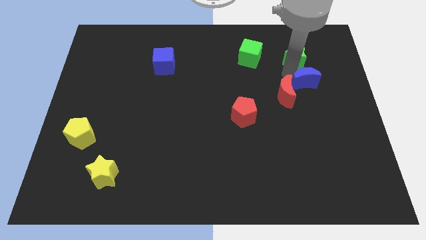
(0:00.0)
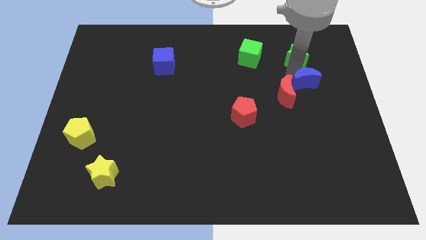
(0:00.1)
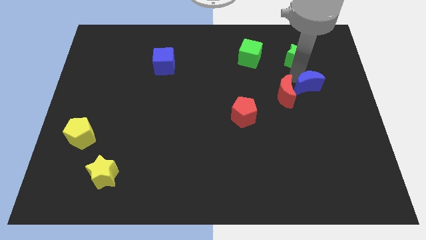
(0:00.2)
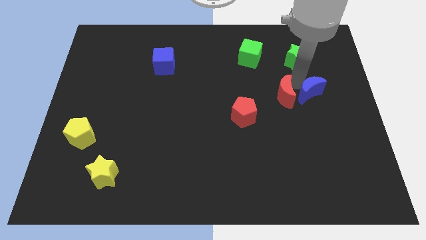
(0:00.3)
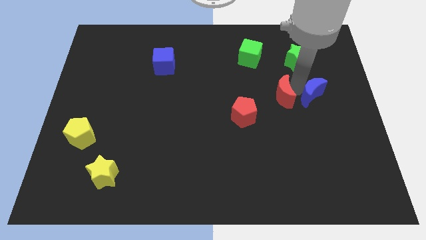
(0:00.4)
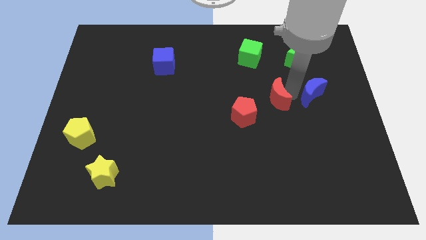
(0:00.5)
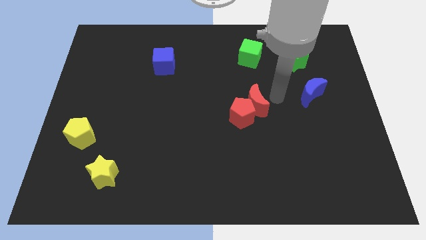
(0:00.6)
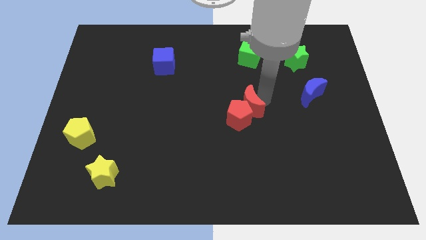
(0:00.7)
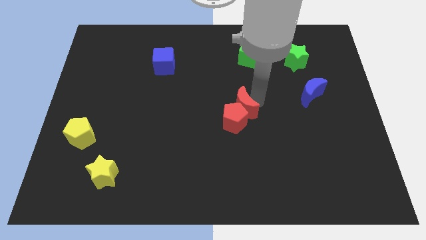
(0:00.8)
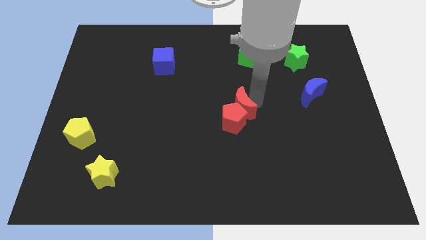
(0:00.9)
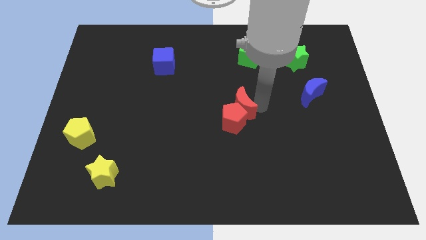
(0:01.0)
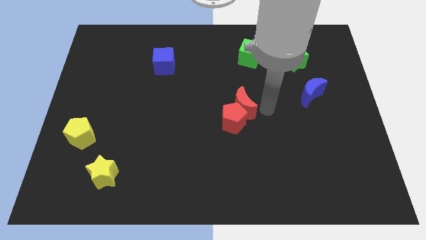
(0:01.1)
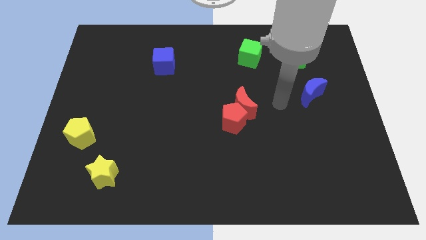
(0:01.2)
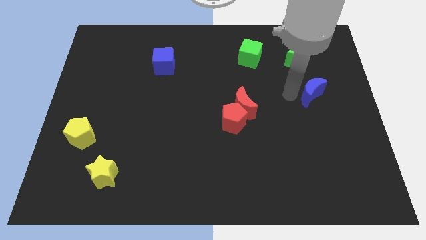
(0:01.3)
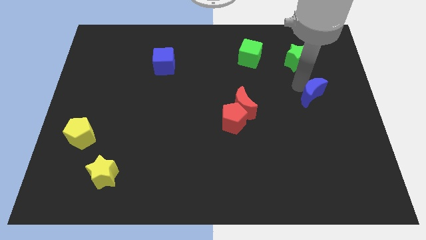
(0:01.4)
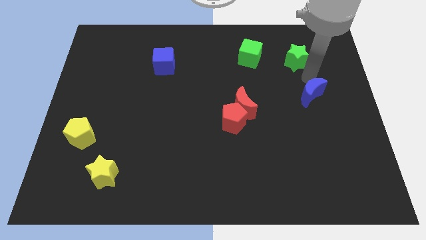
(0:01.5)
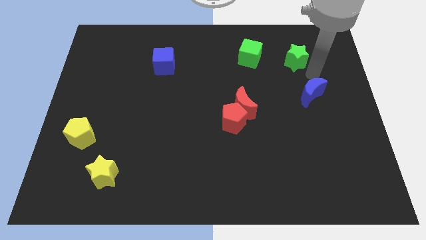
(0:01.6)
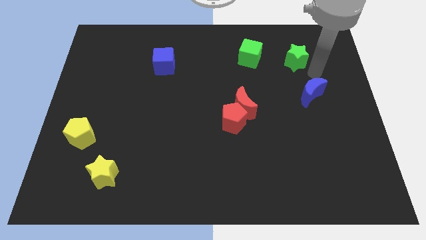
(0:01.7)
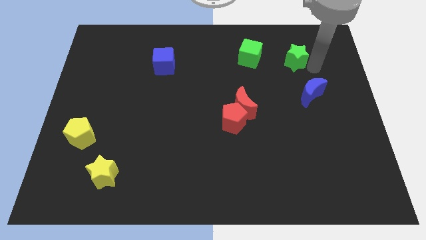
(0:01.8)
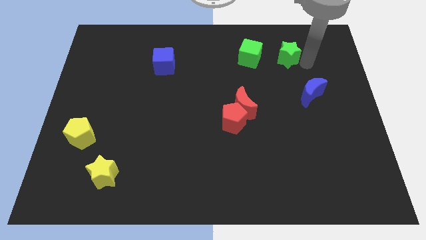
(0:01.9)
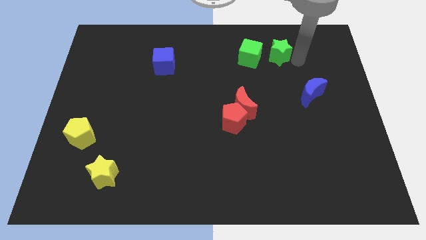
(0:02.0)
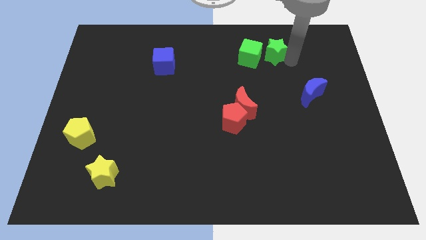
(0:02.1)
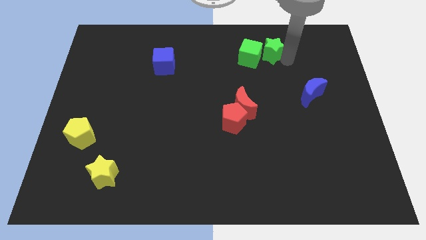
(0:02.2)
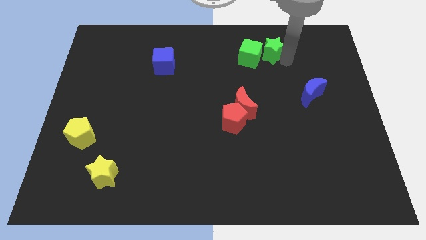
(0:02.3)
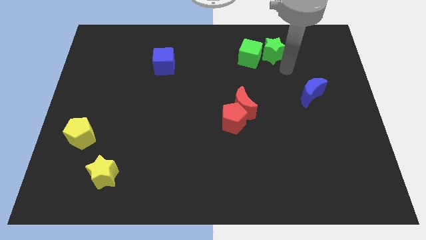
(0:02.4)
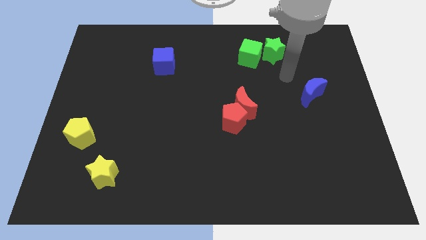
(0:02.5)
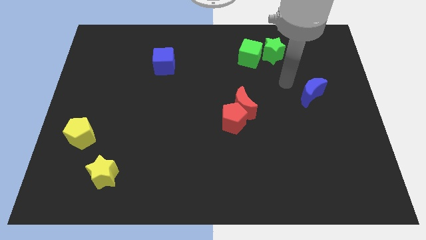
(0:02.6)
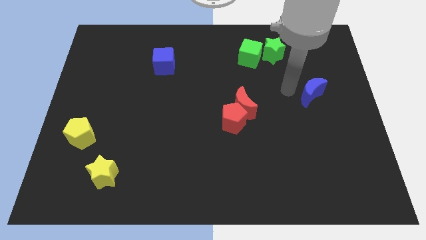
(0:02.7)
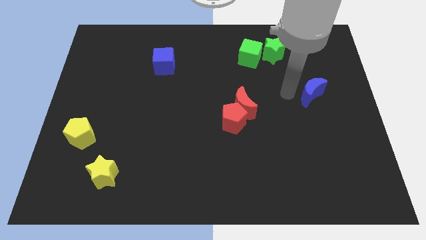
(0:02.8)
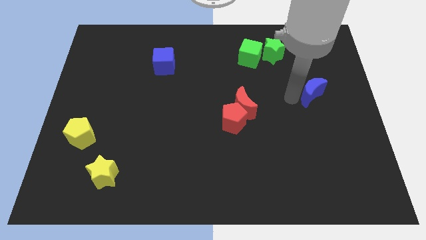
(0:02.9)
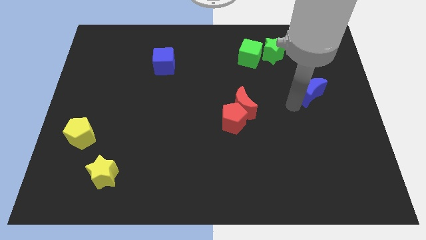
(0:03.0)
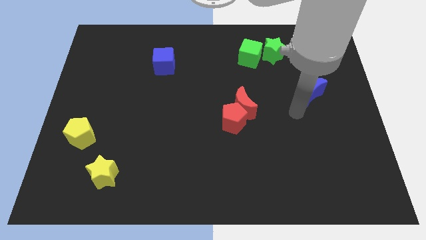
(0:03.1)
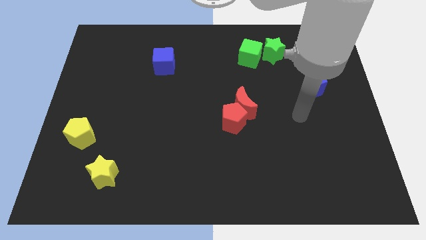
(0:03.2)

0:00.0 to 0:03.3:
slide the green star towards the green cube

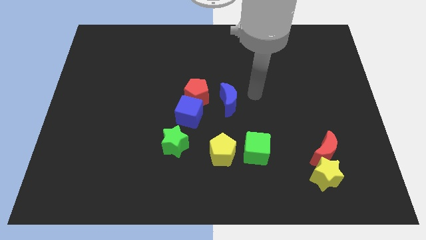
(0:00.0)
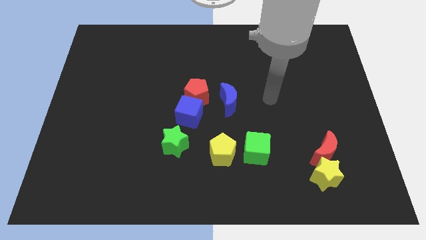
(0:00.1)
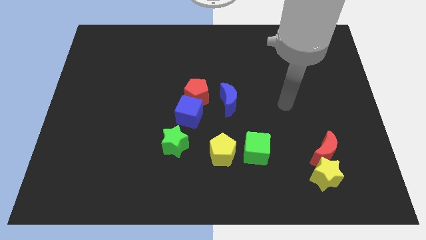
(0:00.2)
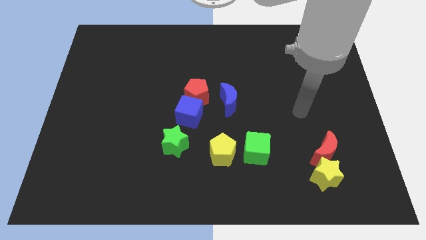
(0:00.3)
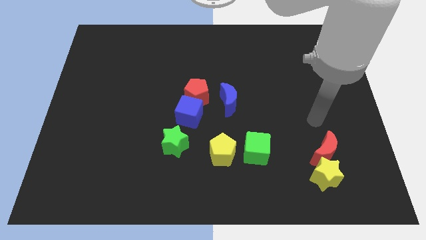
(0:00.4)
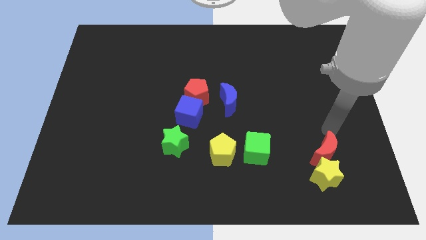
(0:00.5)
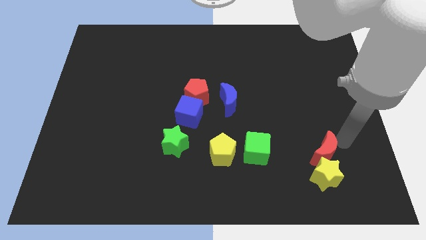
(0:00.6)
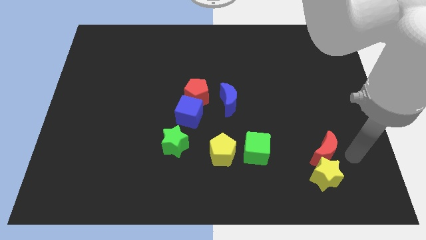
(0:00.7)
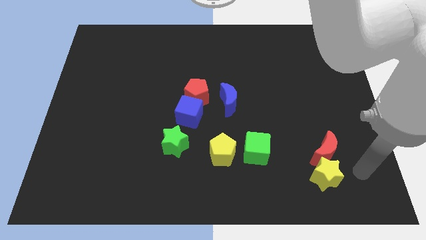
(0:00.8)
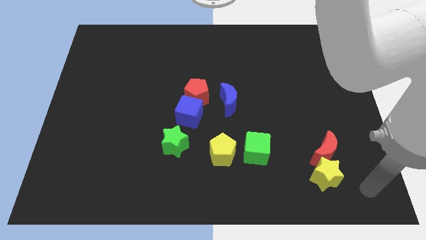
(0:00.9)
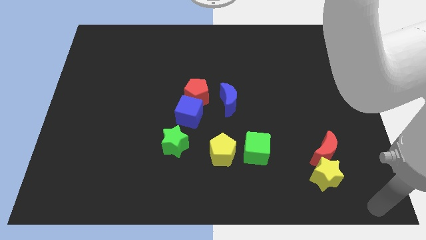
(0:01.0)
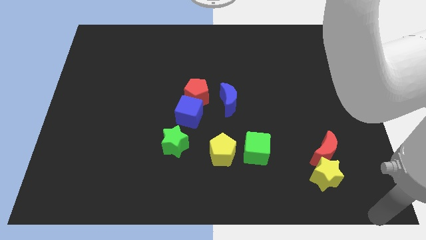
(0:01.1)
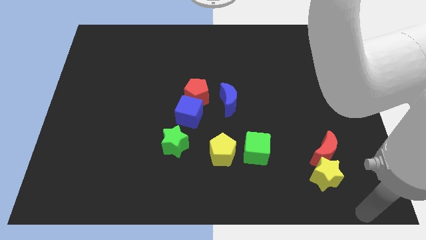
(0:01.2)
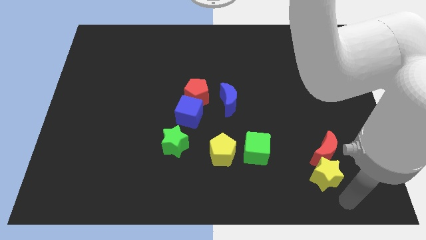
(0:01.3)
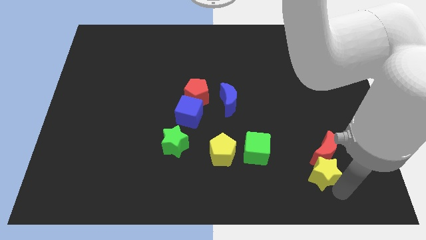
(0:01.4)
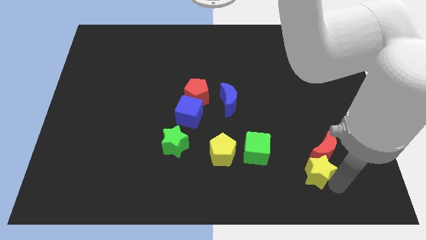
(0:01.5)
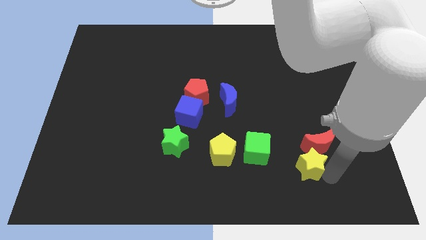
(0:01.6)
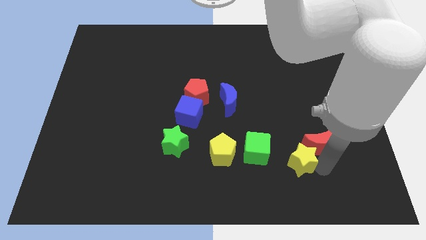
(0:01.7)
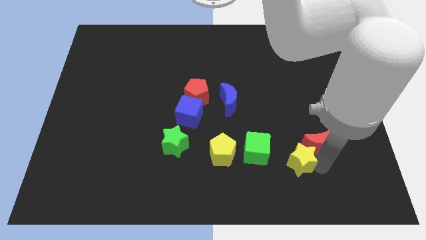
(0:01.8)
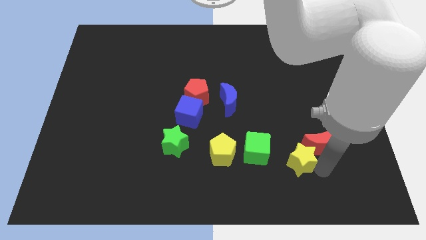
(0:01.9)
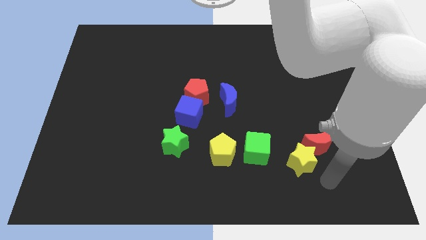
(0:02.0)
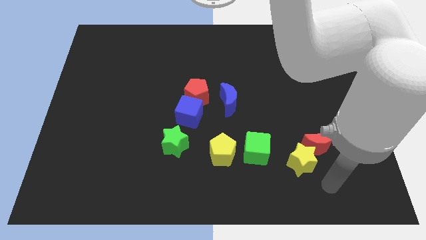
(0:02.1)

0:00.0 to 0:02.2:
slightly slide the yellow star and red crescent towards top side

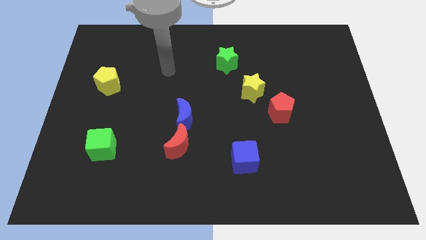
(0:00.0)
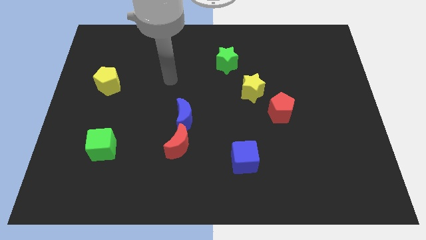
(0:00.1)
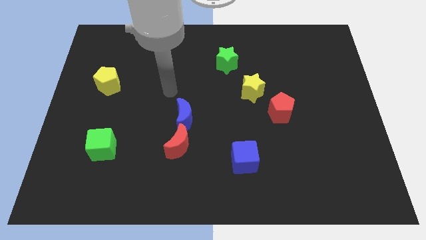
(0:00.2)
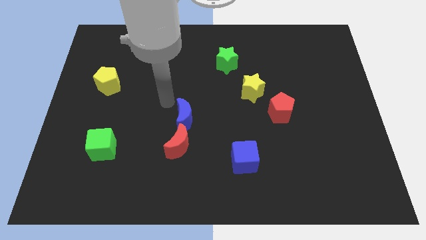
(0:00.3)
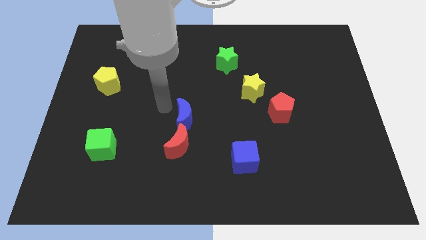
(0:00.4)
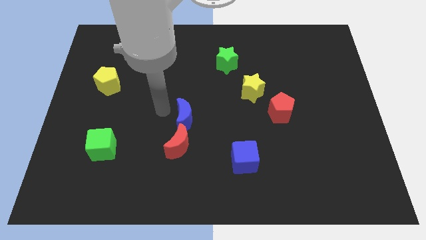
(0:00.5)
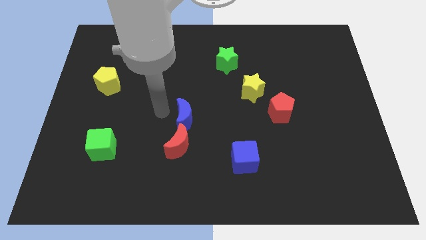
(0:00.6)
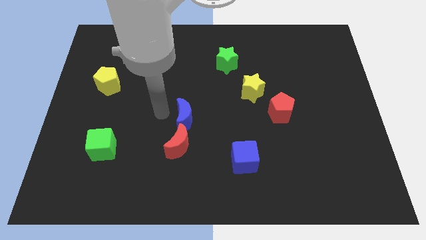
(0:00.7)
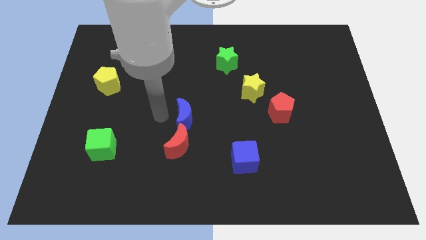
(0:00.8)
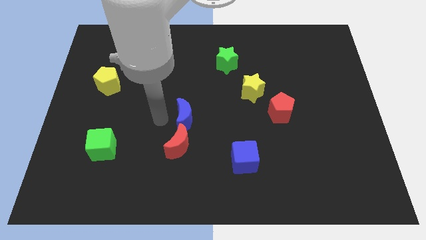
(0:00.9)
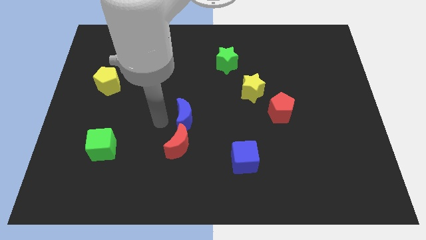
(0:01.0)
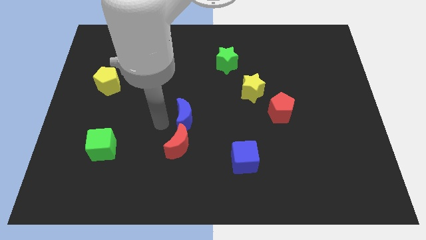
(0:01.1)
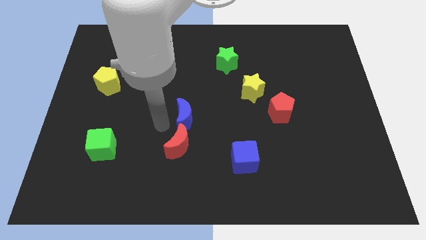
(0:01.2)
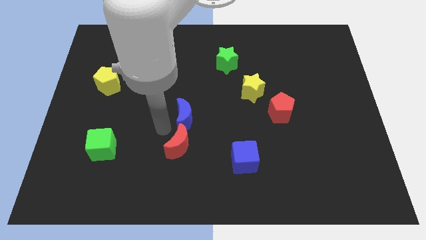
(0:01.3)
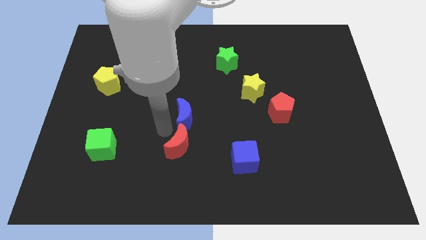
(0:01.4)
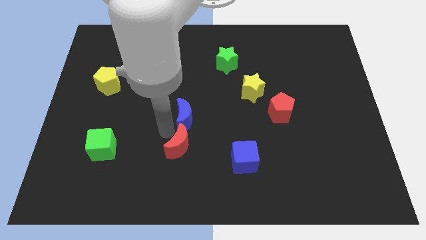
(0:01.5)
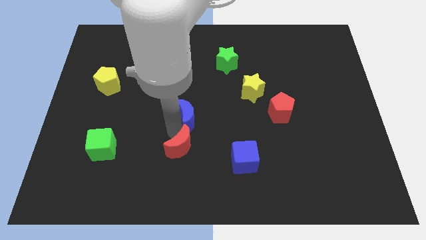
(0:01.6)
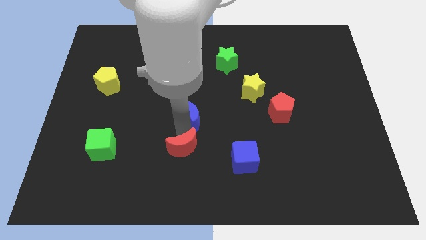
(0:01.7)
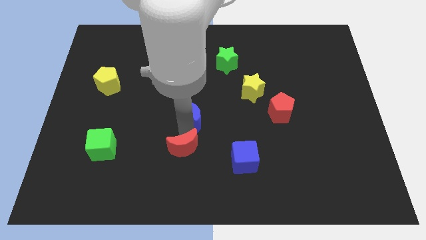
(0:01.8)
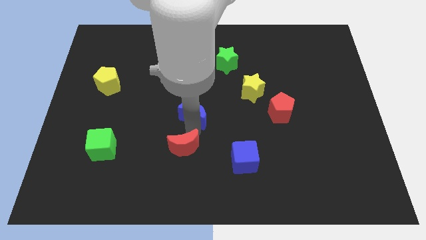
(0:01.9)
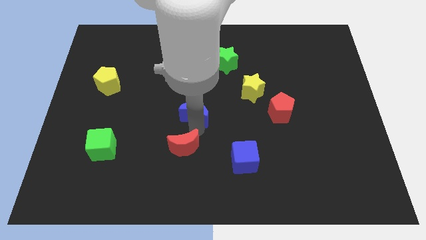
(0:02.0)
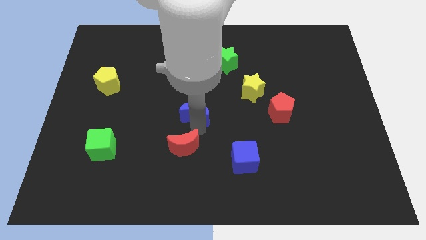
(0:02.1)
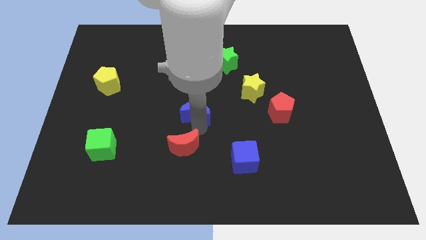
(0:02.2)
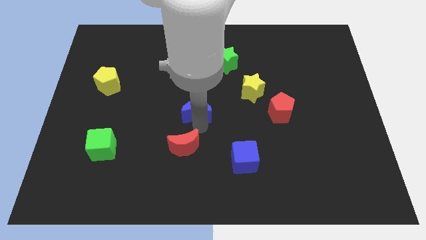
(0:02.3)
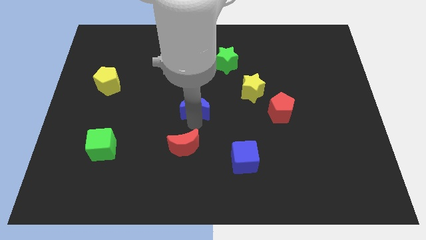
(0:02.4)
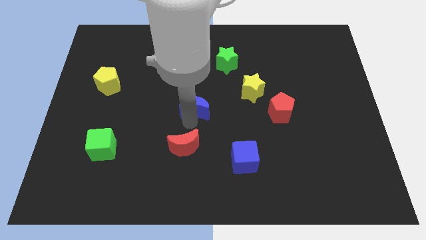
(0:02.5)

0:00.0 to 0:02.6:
separate the blue crescent from the red crescent

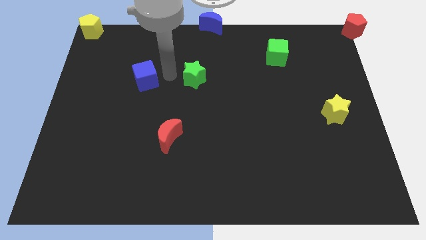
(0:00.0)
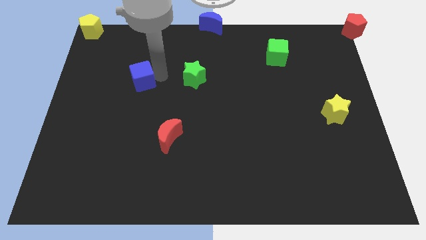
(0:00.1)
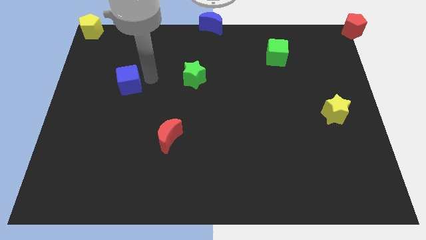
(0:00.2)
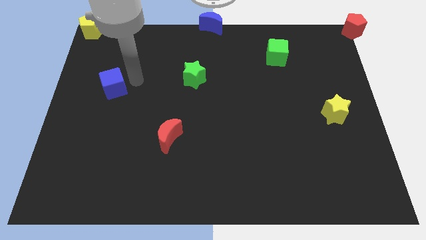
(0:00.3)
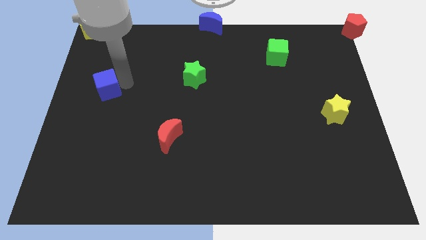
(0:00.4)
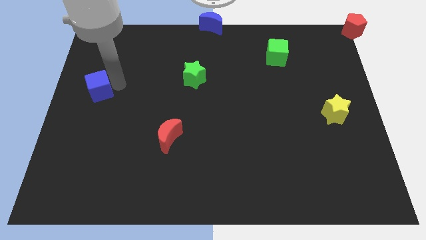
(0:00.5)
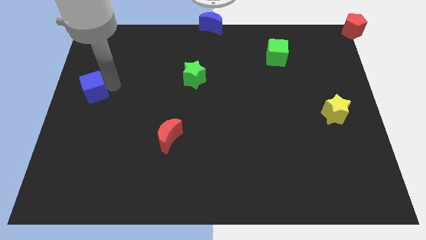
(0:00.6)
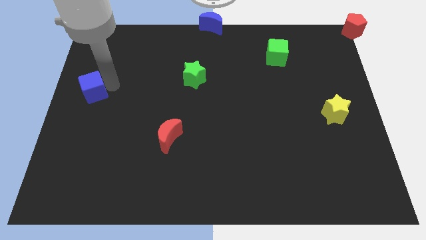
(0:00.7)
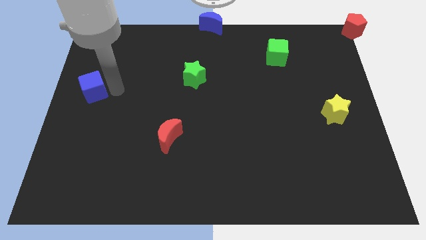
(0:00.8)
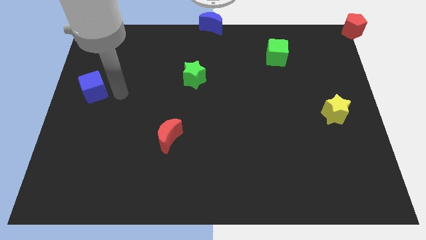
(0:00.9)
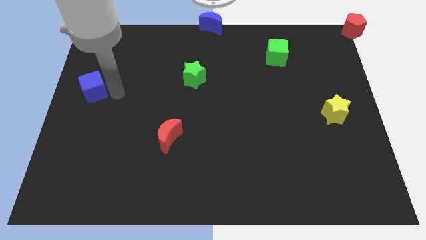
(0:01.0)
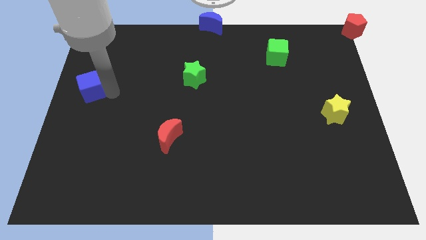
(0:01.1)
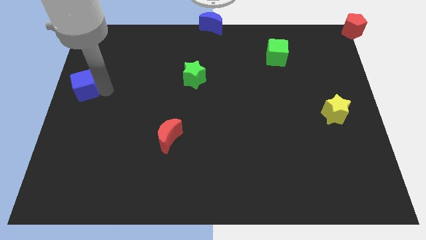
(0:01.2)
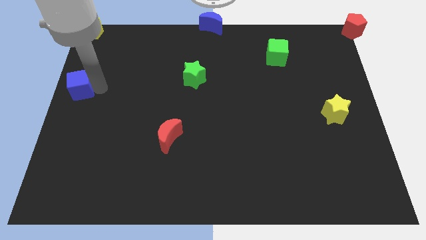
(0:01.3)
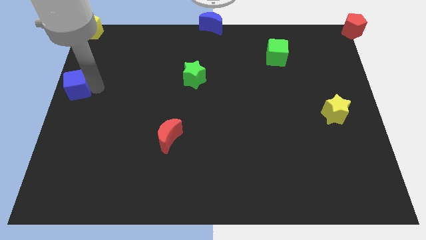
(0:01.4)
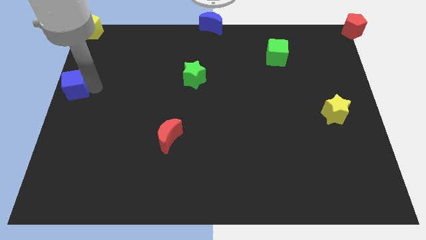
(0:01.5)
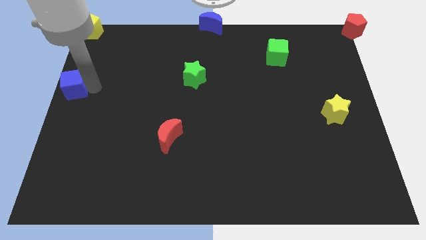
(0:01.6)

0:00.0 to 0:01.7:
push the blue cube to the center left
